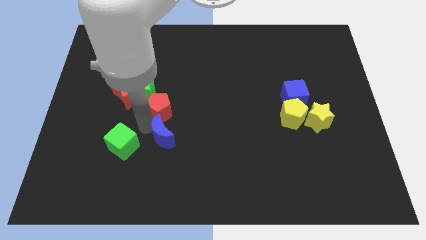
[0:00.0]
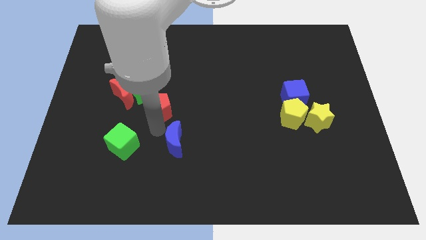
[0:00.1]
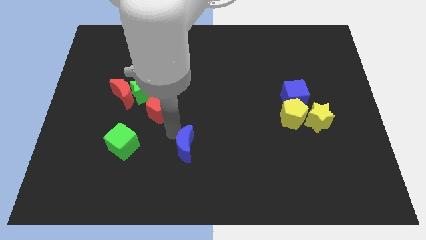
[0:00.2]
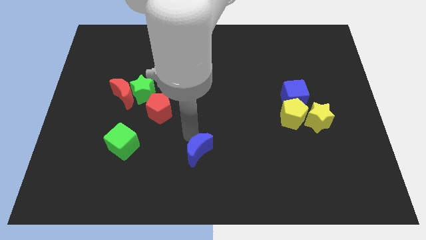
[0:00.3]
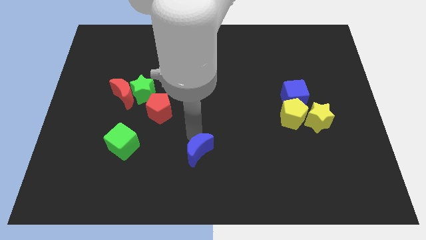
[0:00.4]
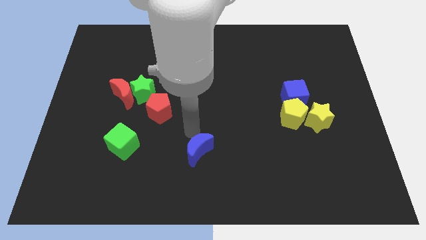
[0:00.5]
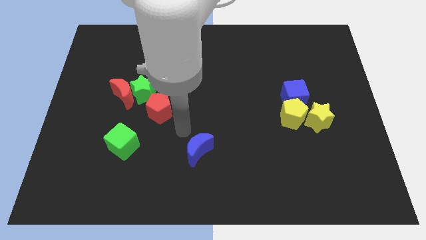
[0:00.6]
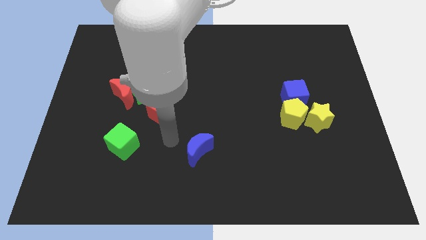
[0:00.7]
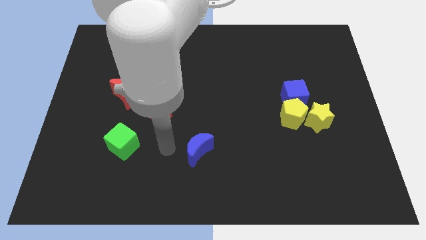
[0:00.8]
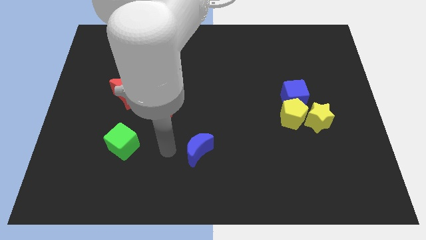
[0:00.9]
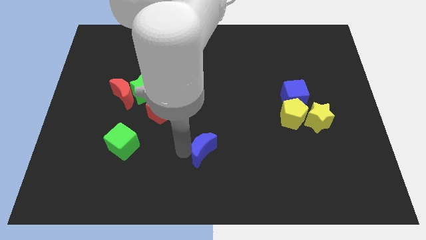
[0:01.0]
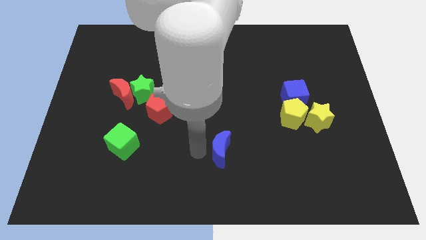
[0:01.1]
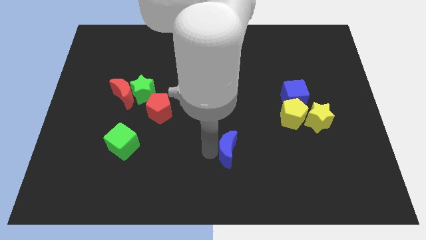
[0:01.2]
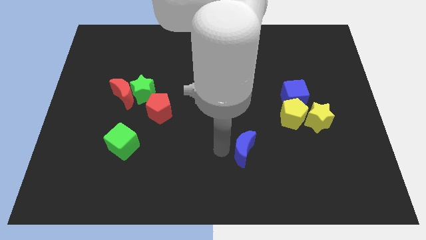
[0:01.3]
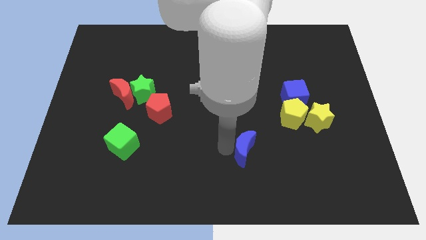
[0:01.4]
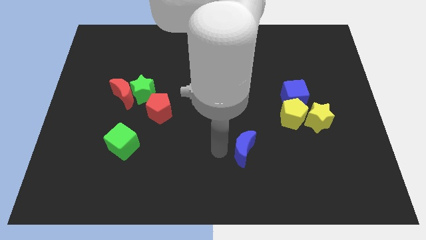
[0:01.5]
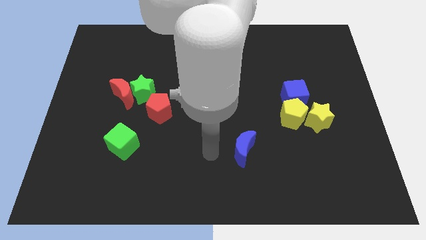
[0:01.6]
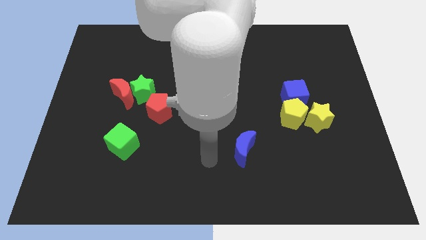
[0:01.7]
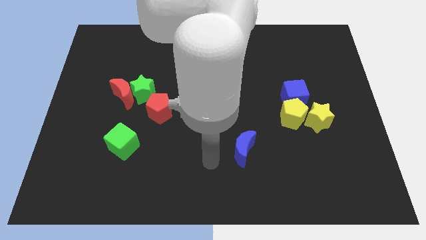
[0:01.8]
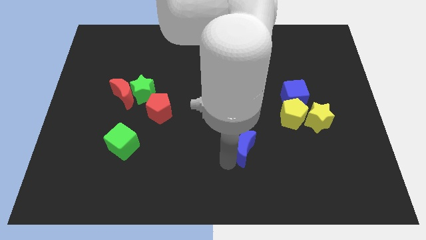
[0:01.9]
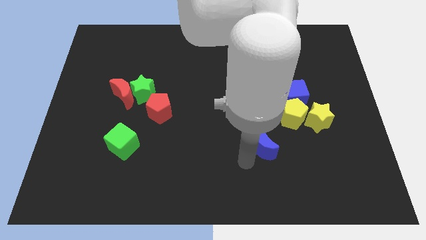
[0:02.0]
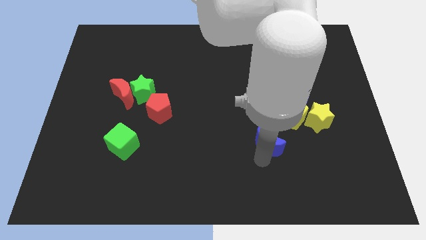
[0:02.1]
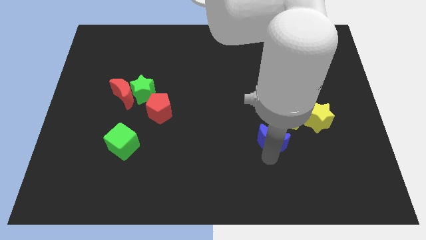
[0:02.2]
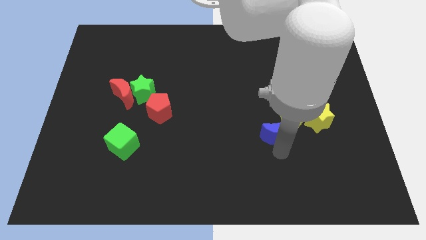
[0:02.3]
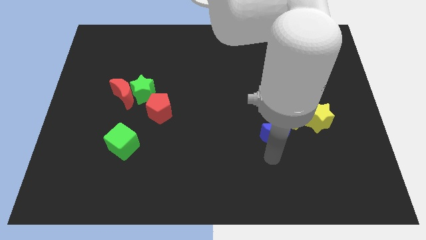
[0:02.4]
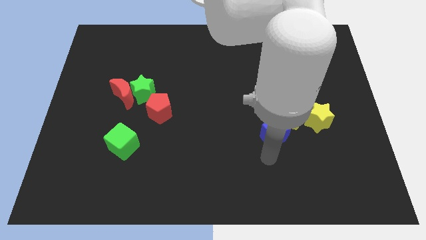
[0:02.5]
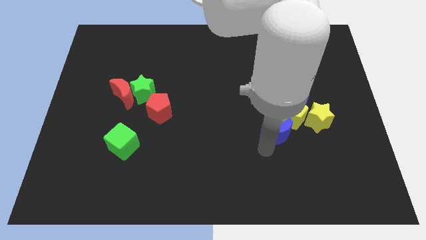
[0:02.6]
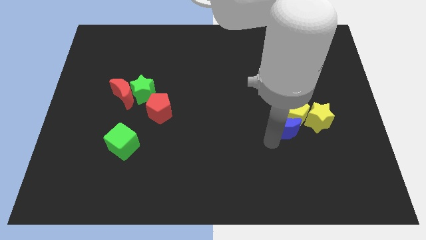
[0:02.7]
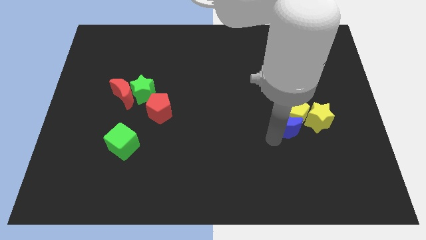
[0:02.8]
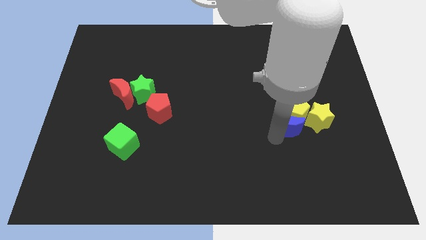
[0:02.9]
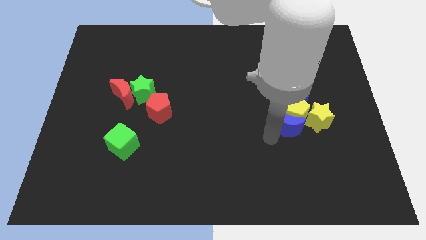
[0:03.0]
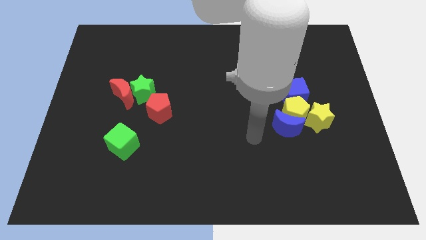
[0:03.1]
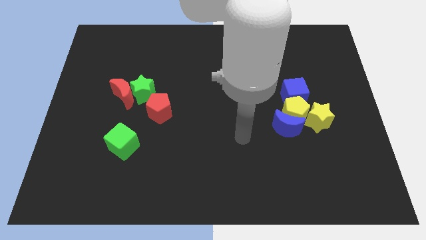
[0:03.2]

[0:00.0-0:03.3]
push the blue moon into the yellow pentagon

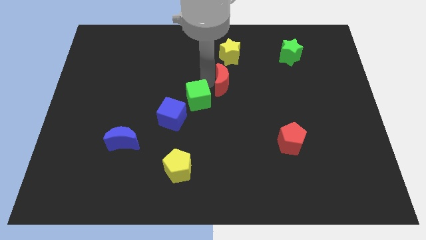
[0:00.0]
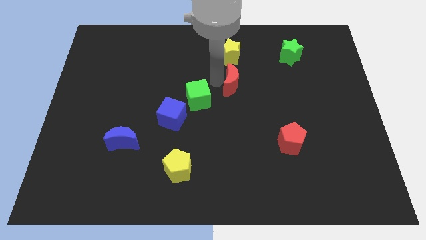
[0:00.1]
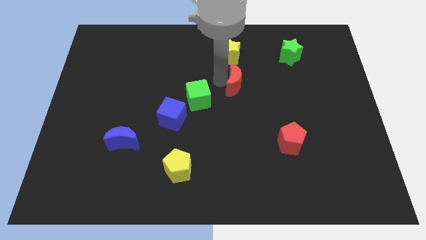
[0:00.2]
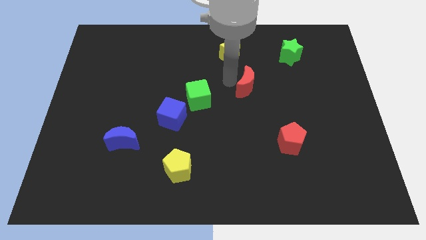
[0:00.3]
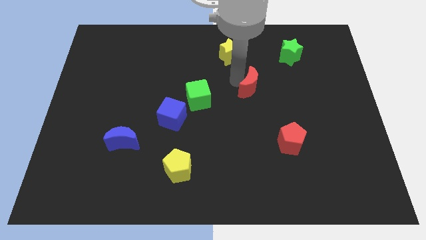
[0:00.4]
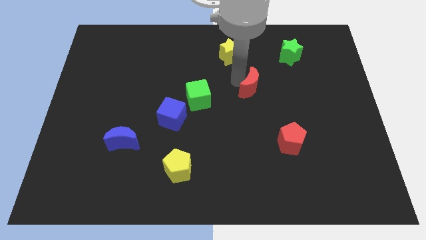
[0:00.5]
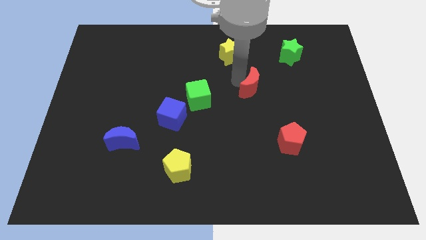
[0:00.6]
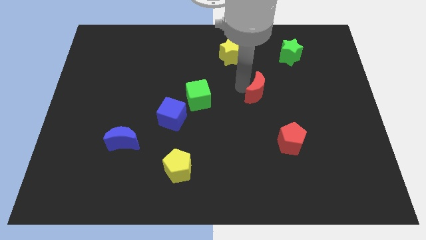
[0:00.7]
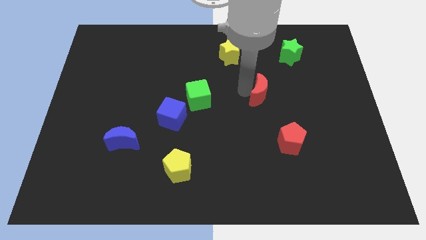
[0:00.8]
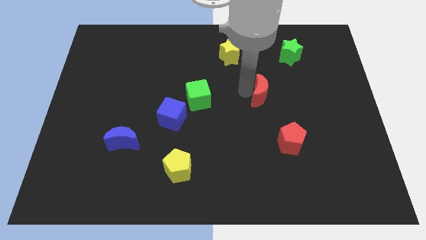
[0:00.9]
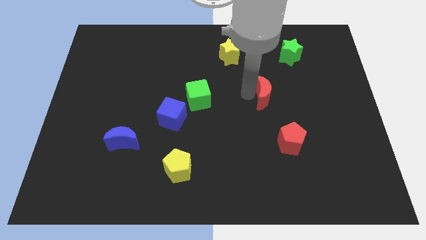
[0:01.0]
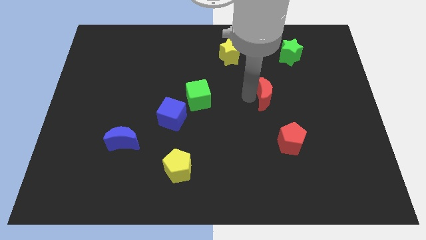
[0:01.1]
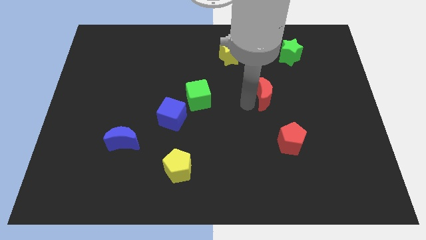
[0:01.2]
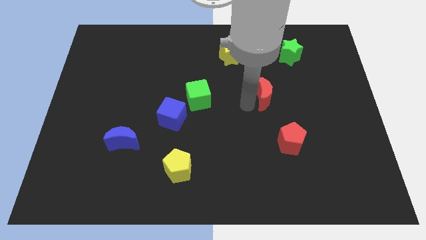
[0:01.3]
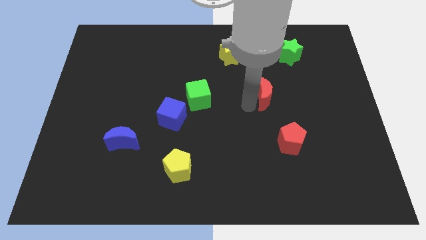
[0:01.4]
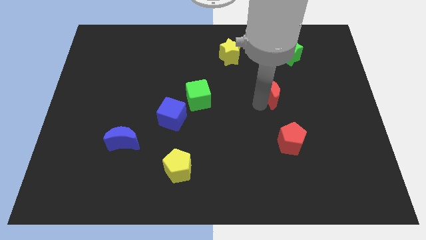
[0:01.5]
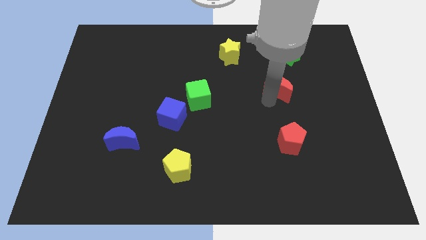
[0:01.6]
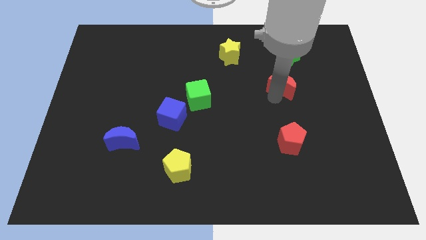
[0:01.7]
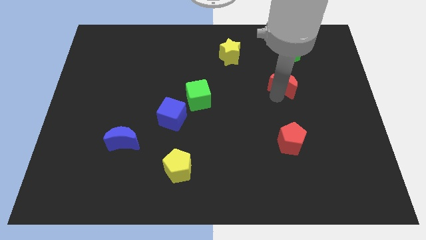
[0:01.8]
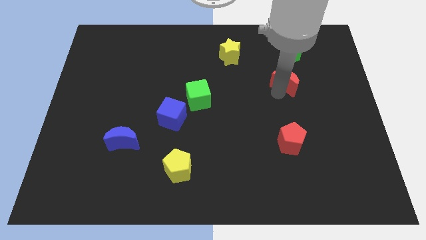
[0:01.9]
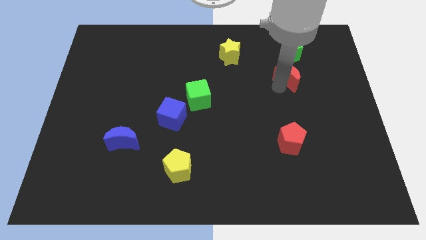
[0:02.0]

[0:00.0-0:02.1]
place red crescent below the green star

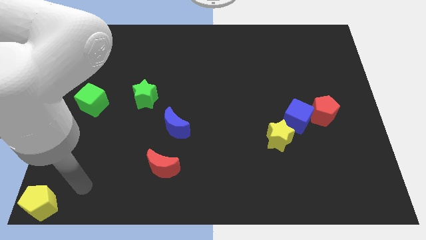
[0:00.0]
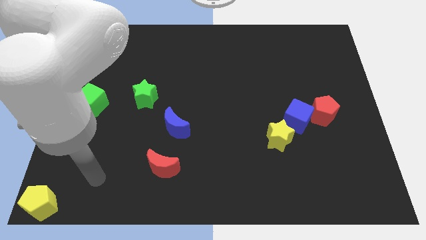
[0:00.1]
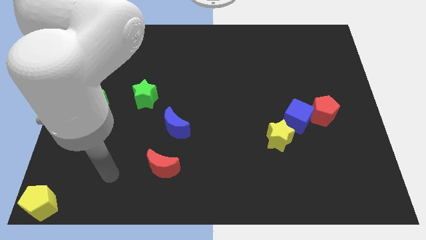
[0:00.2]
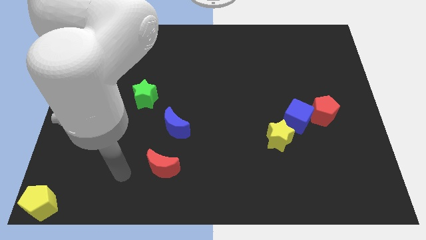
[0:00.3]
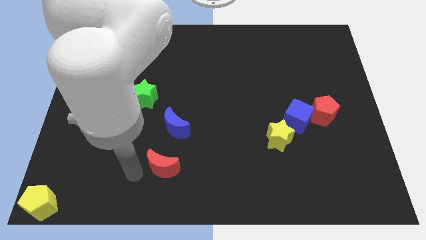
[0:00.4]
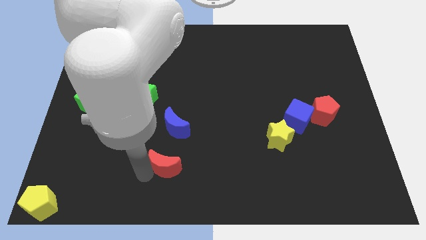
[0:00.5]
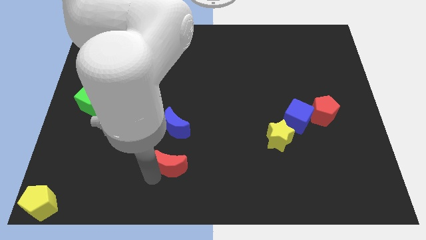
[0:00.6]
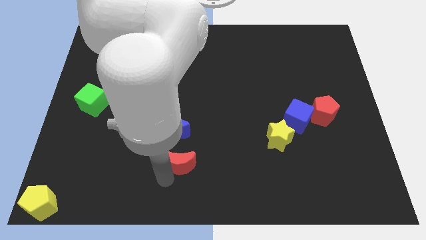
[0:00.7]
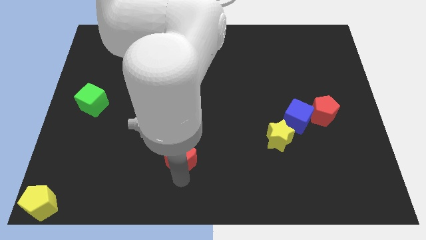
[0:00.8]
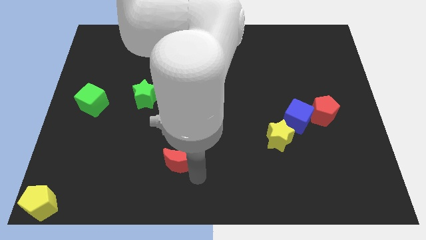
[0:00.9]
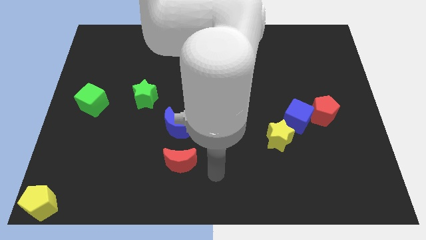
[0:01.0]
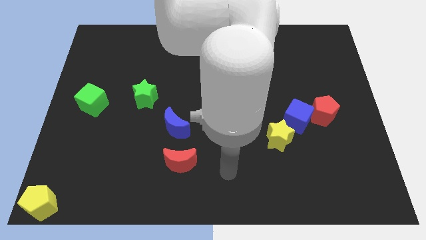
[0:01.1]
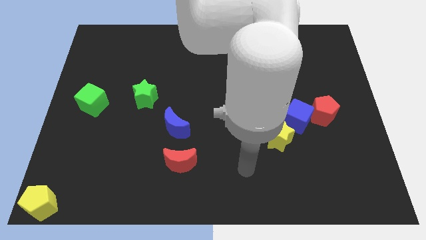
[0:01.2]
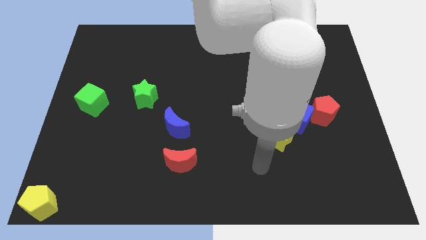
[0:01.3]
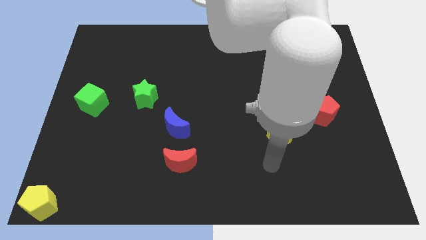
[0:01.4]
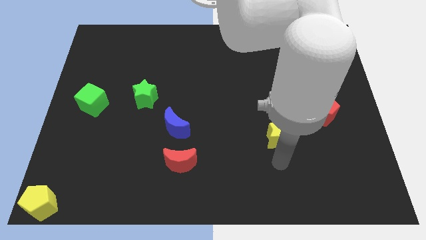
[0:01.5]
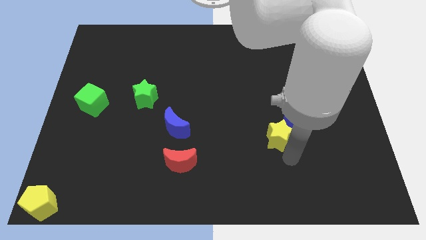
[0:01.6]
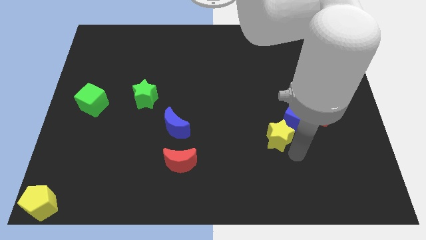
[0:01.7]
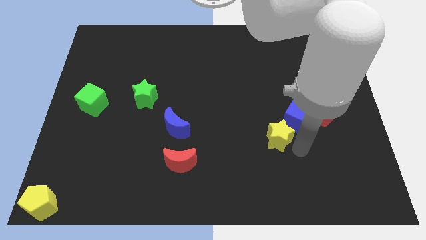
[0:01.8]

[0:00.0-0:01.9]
slightly touch the red crescent

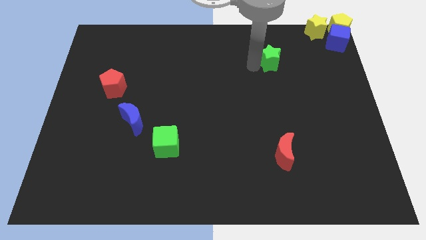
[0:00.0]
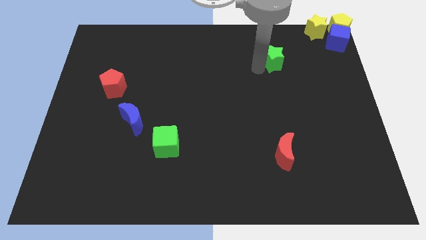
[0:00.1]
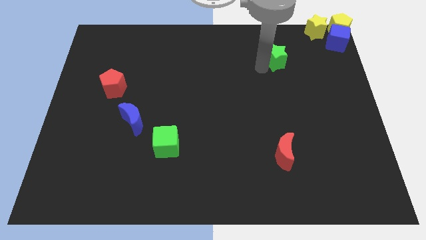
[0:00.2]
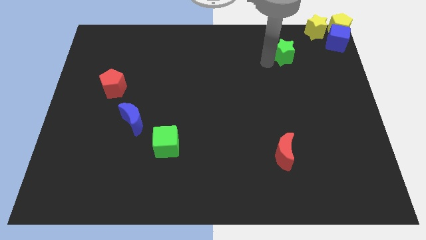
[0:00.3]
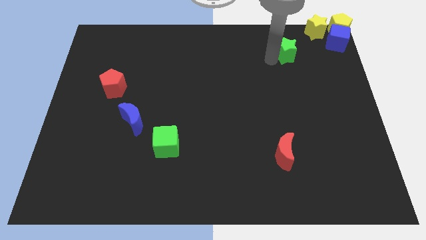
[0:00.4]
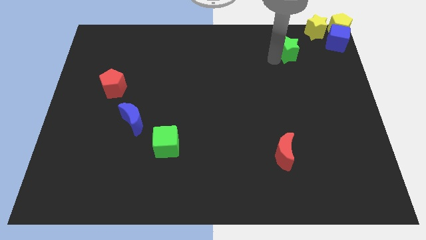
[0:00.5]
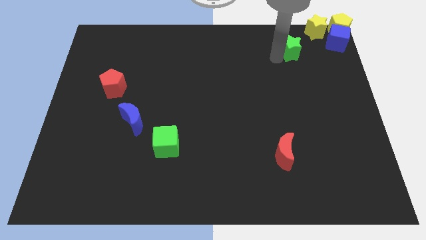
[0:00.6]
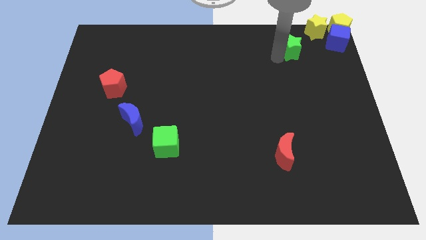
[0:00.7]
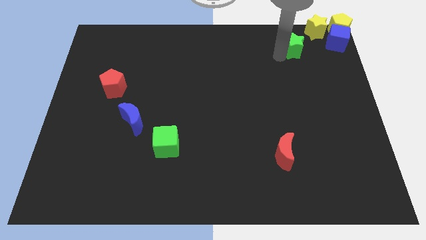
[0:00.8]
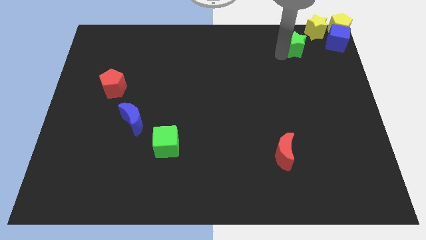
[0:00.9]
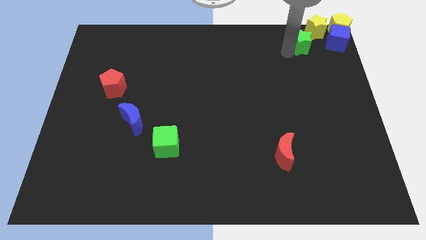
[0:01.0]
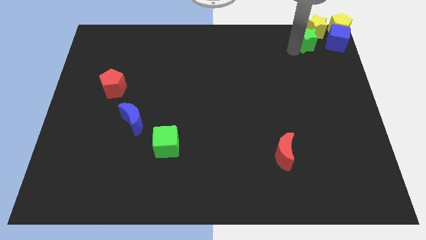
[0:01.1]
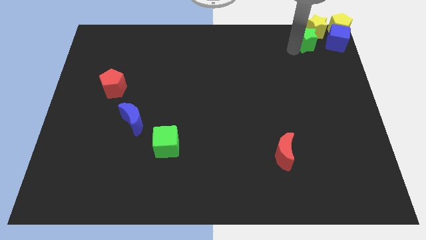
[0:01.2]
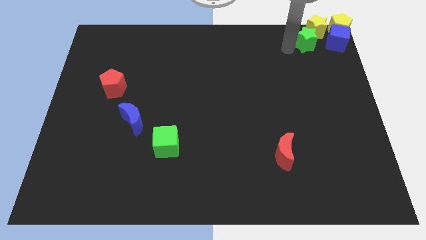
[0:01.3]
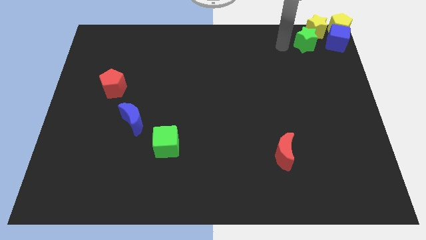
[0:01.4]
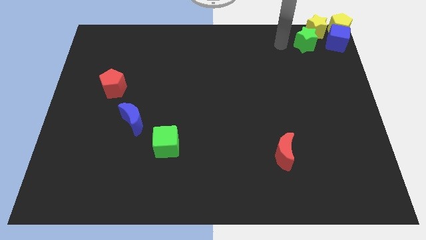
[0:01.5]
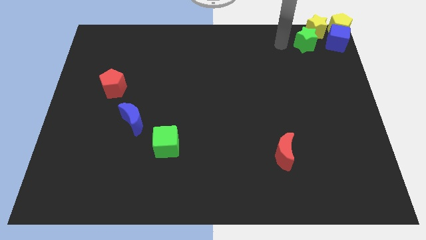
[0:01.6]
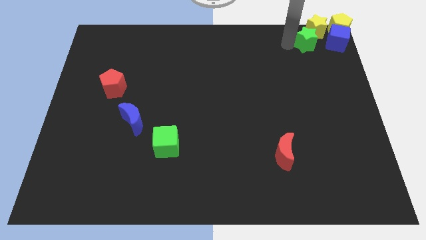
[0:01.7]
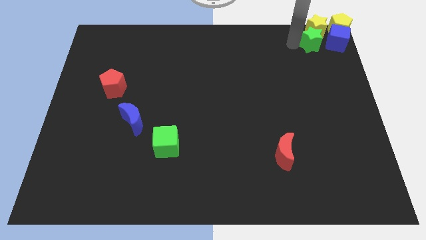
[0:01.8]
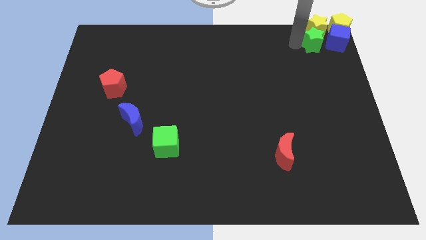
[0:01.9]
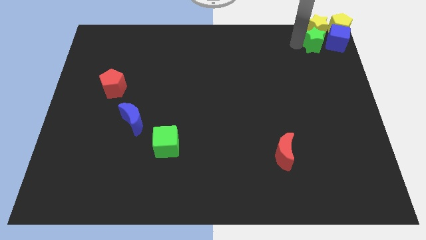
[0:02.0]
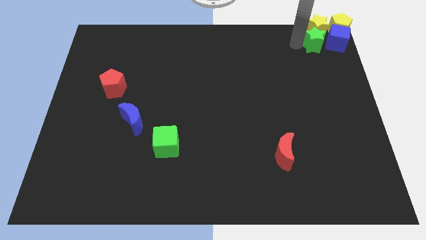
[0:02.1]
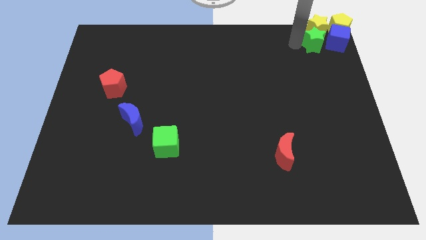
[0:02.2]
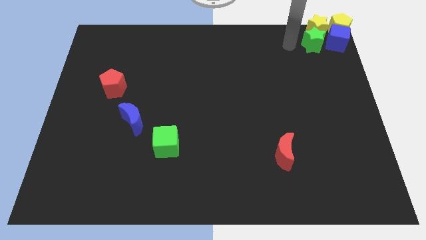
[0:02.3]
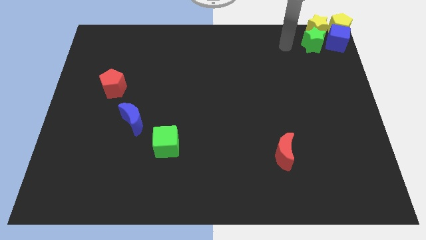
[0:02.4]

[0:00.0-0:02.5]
place the green star below the yellow star
